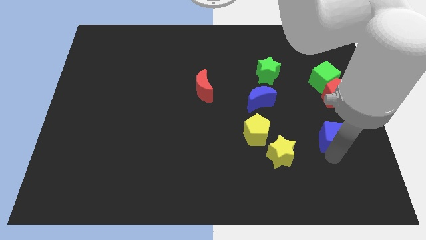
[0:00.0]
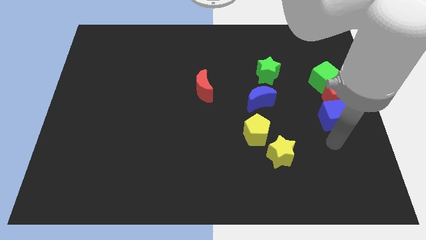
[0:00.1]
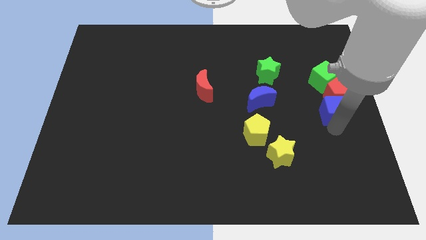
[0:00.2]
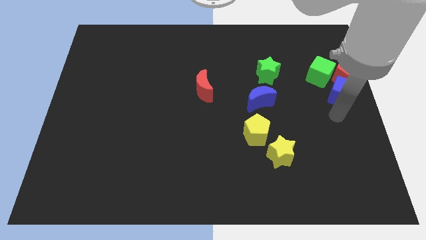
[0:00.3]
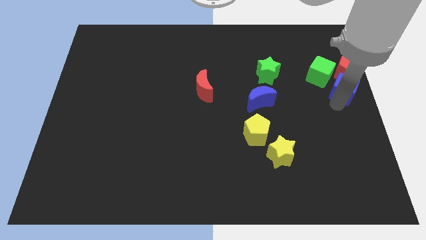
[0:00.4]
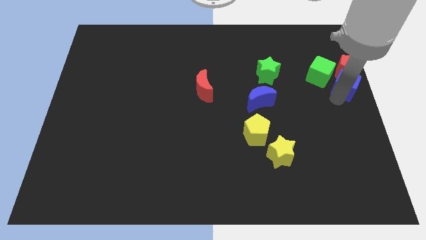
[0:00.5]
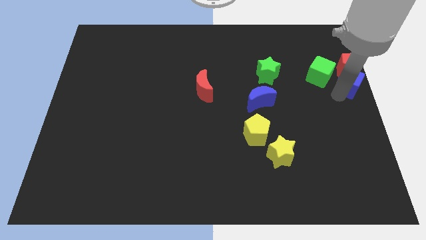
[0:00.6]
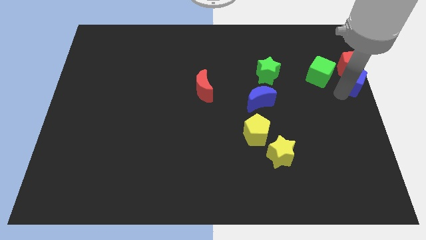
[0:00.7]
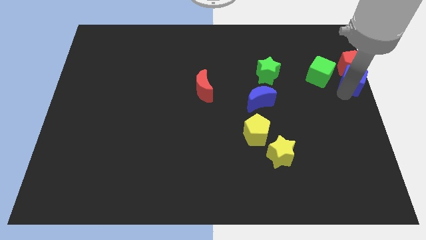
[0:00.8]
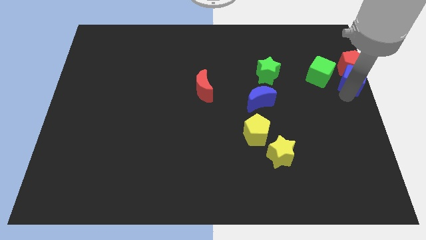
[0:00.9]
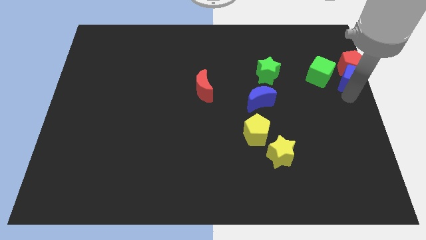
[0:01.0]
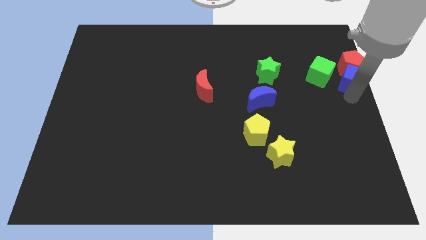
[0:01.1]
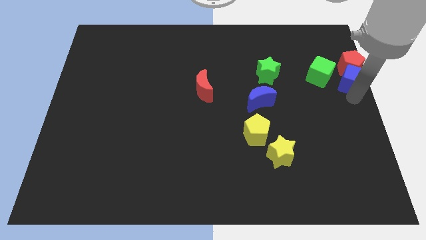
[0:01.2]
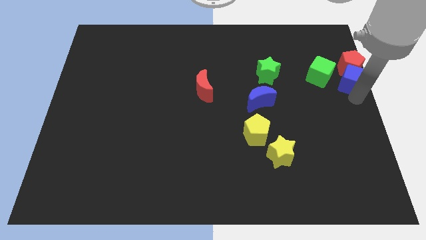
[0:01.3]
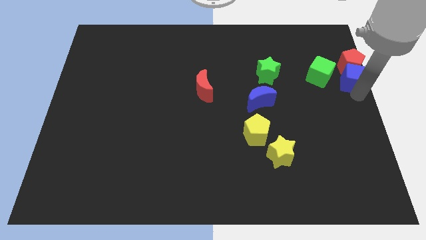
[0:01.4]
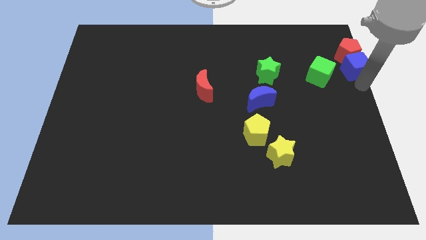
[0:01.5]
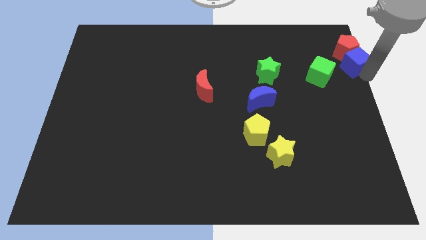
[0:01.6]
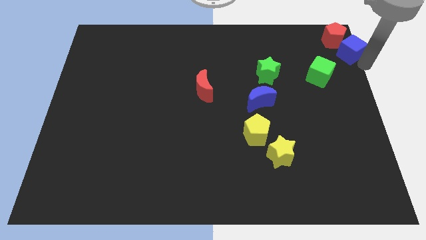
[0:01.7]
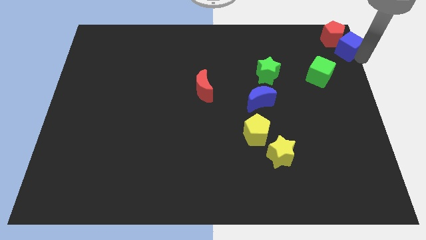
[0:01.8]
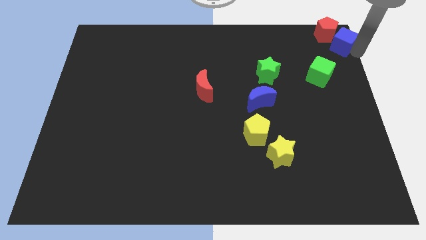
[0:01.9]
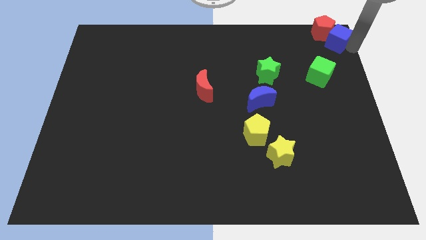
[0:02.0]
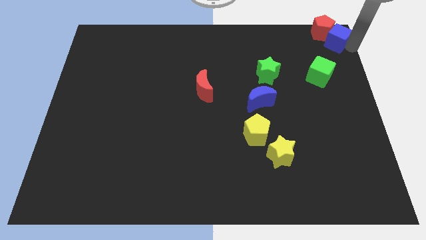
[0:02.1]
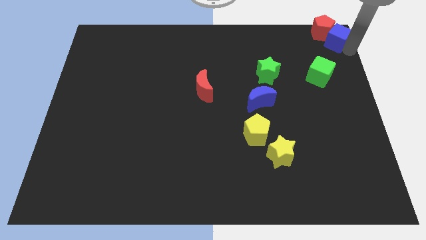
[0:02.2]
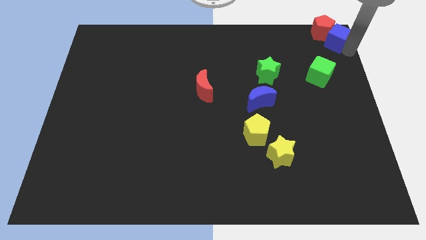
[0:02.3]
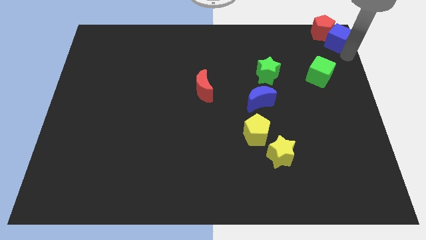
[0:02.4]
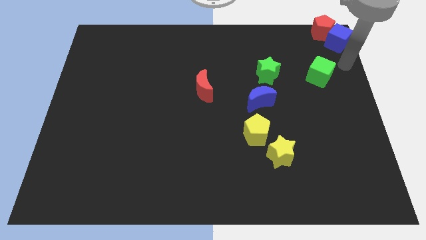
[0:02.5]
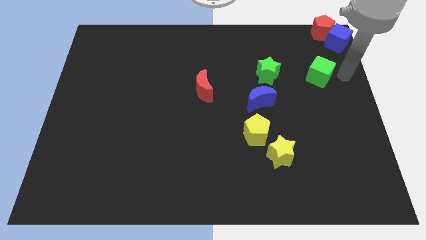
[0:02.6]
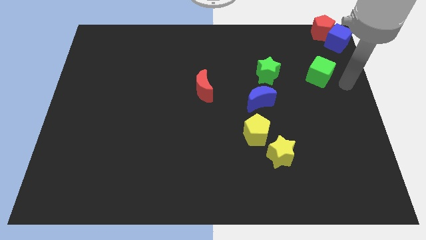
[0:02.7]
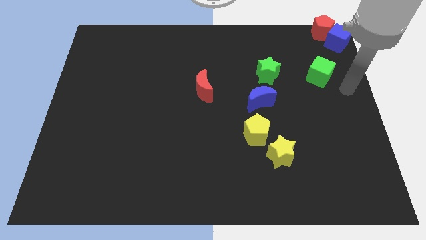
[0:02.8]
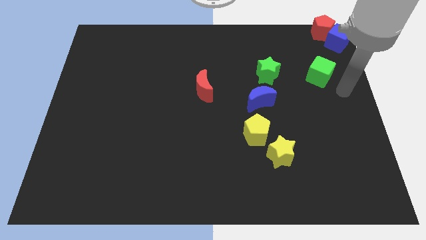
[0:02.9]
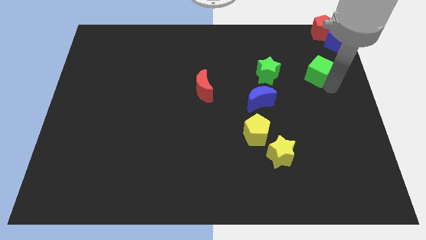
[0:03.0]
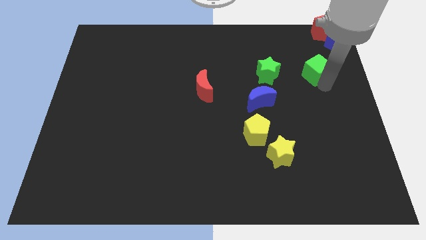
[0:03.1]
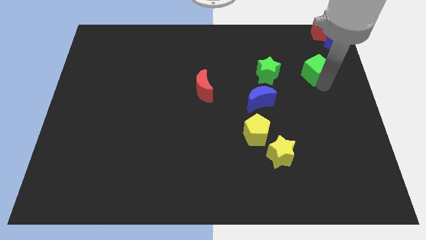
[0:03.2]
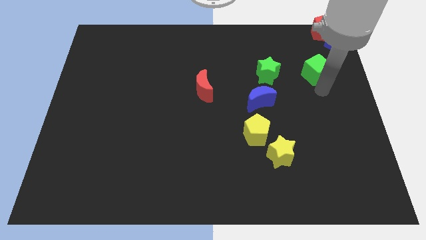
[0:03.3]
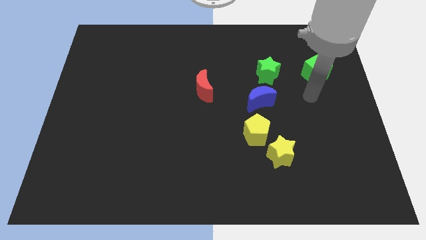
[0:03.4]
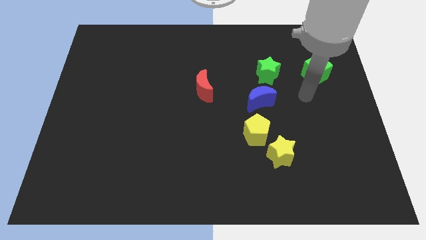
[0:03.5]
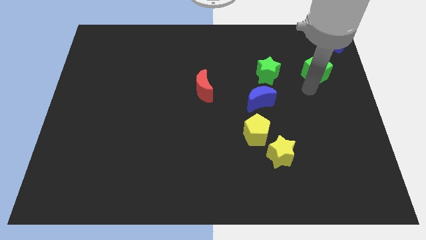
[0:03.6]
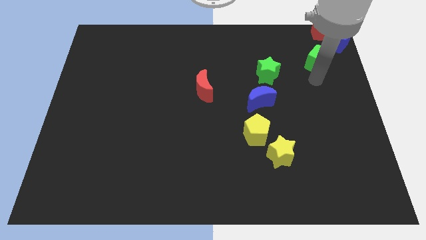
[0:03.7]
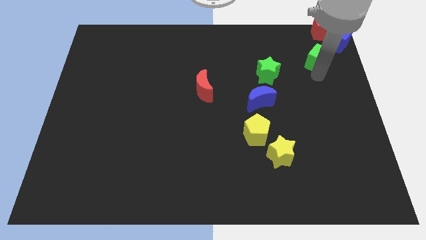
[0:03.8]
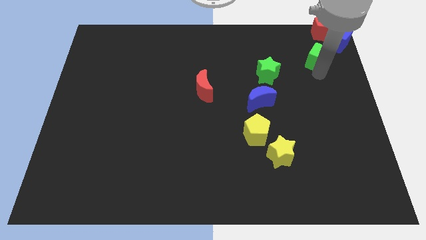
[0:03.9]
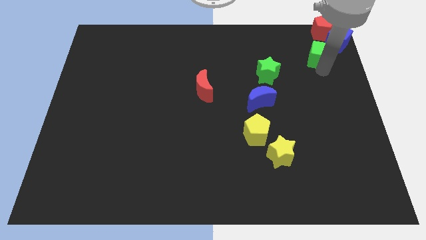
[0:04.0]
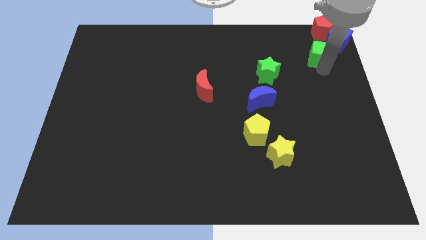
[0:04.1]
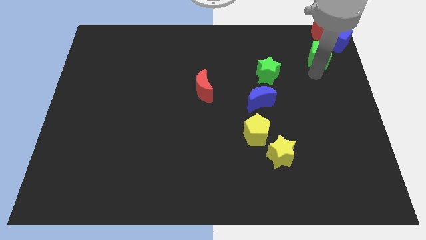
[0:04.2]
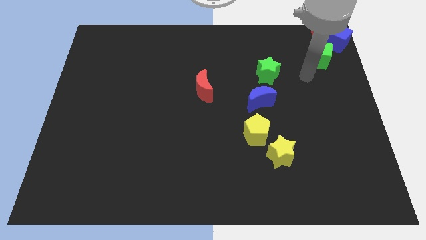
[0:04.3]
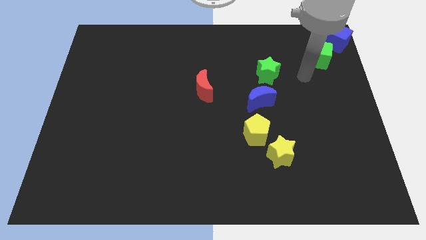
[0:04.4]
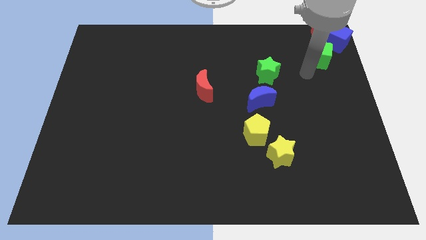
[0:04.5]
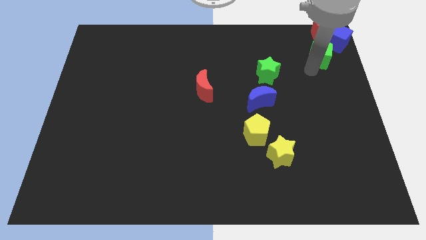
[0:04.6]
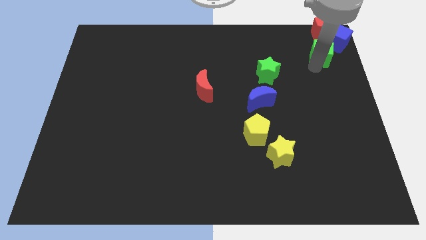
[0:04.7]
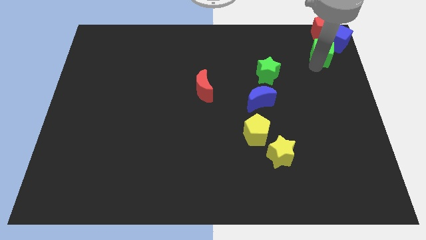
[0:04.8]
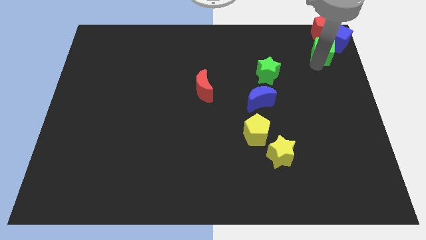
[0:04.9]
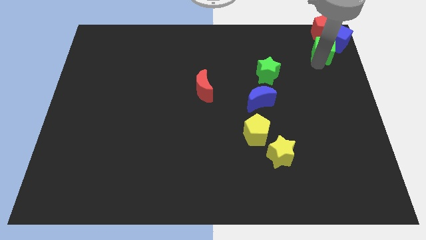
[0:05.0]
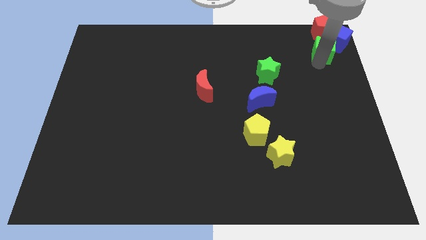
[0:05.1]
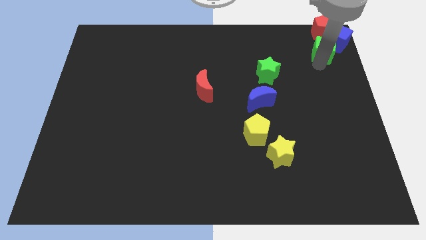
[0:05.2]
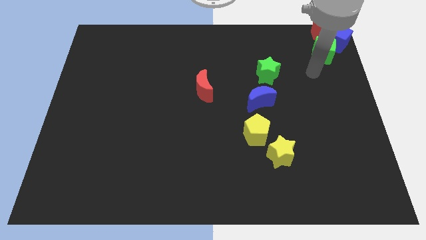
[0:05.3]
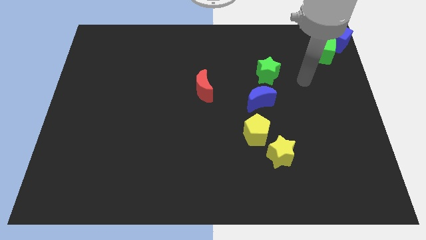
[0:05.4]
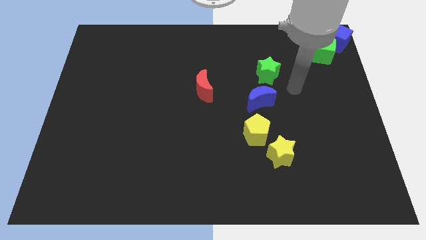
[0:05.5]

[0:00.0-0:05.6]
push the blue cube and green cube red pentagon to top right corner

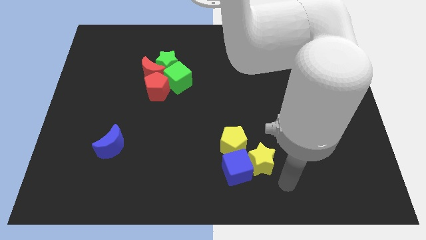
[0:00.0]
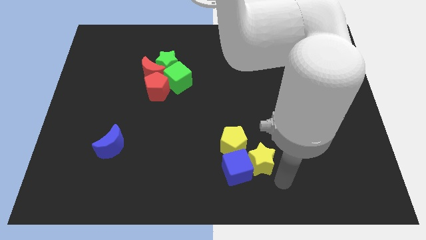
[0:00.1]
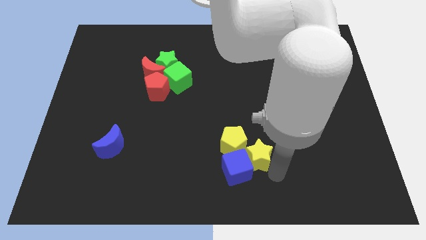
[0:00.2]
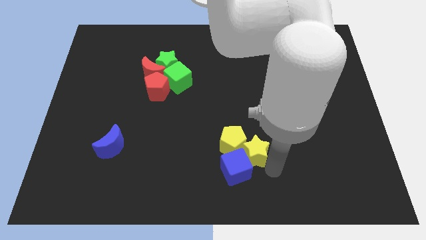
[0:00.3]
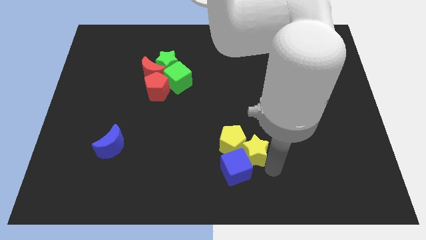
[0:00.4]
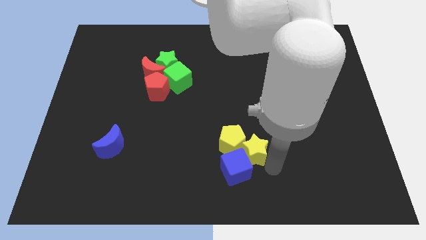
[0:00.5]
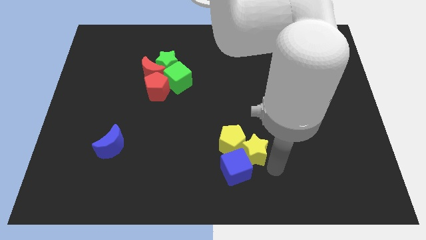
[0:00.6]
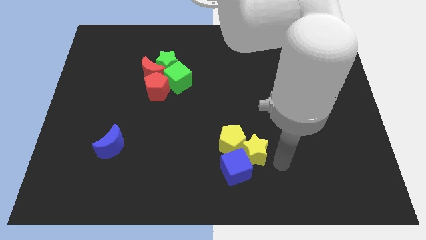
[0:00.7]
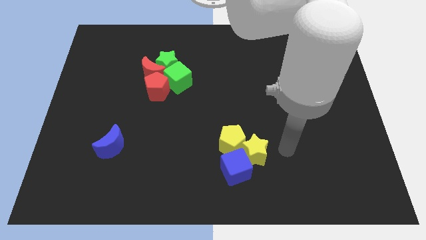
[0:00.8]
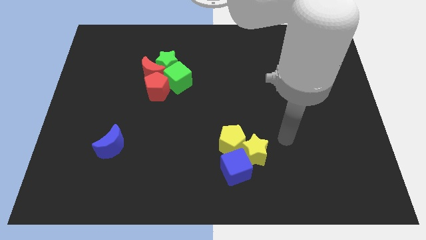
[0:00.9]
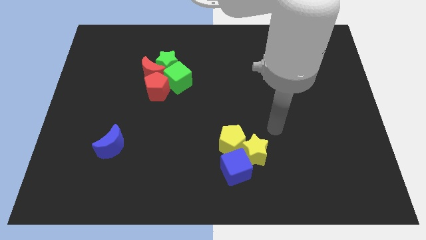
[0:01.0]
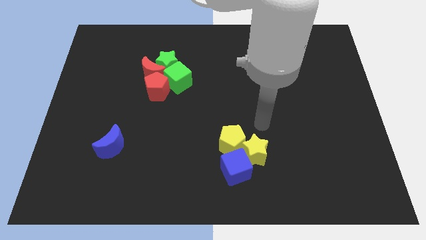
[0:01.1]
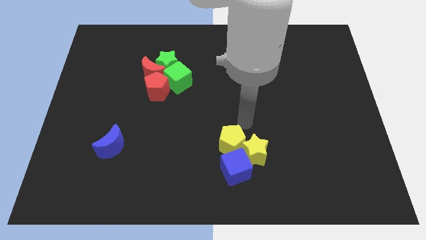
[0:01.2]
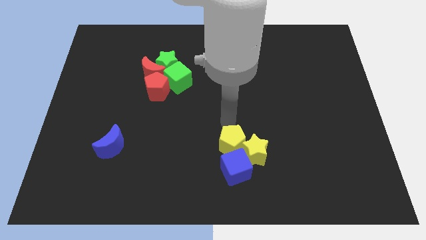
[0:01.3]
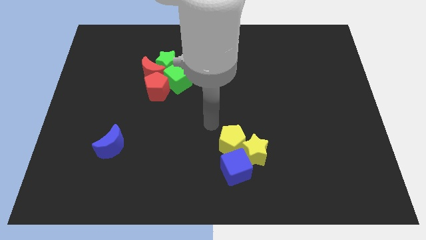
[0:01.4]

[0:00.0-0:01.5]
slightly move the yellow starnear to the yellow pentagon

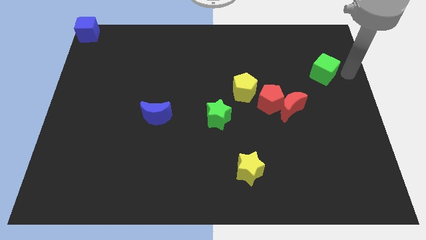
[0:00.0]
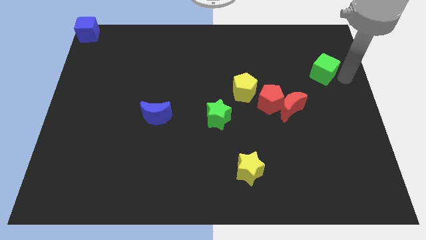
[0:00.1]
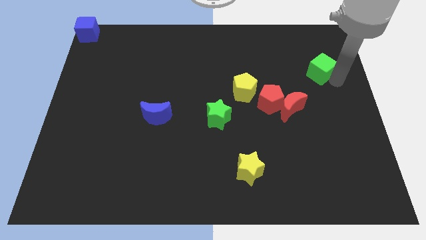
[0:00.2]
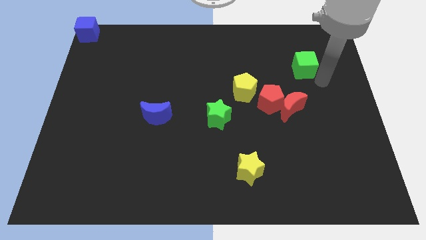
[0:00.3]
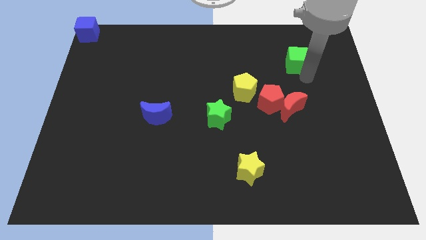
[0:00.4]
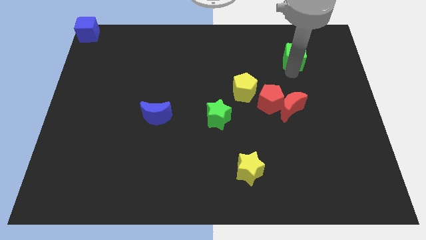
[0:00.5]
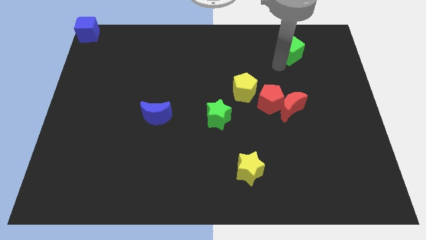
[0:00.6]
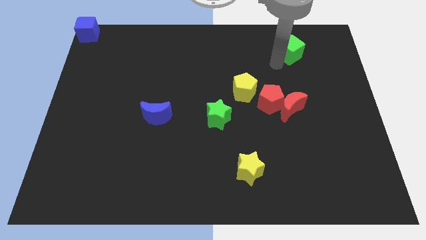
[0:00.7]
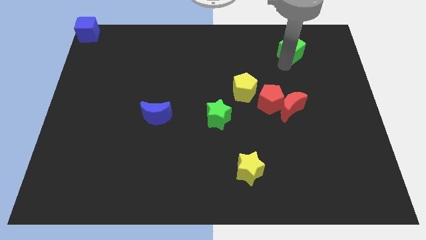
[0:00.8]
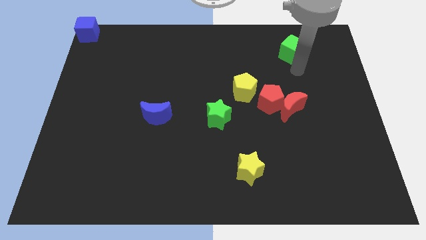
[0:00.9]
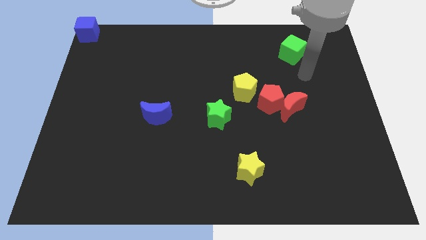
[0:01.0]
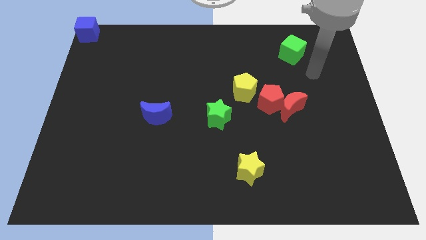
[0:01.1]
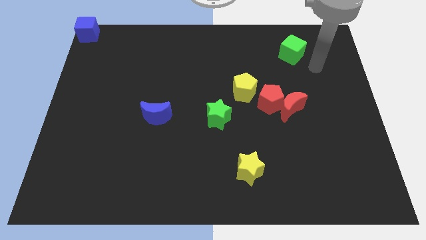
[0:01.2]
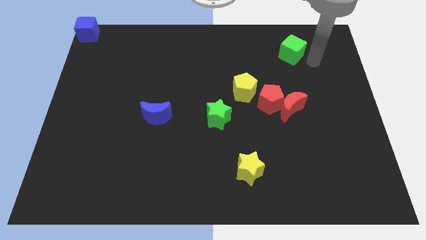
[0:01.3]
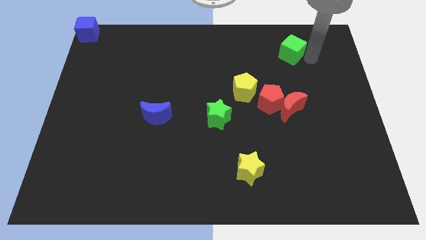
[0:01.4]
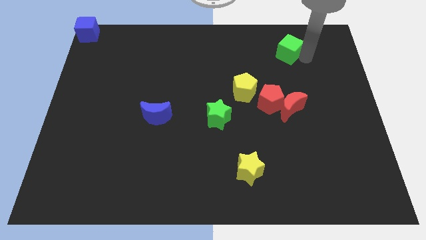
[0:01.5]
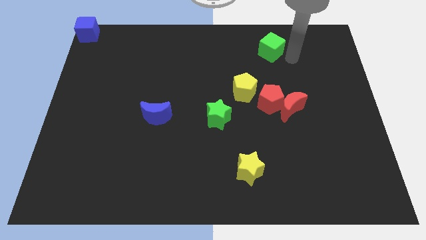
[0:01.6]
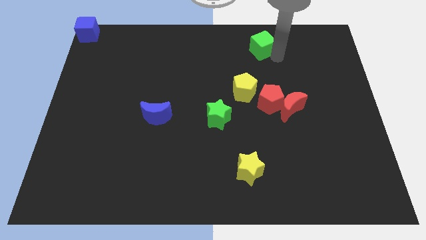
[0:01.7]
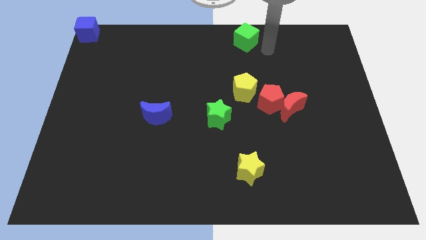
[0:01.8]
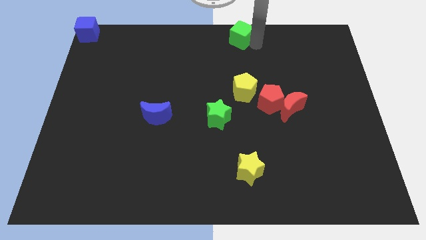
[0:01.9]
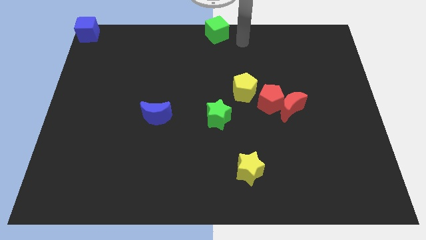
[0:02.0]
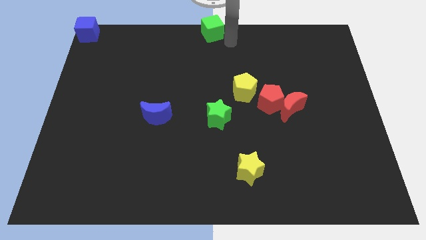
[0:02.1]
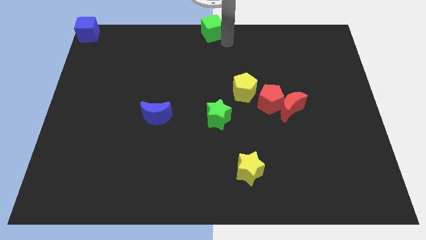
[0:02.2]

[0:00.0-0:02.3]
move the green cube to the top center of the board
